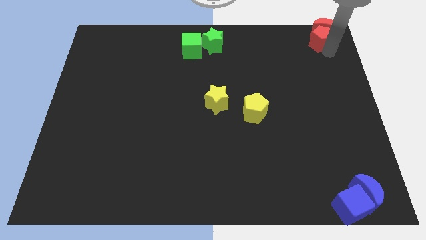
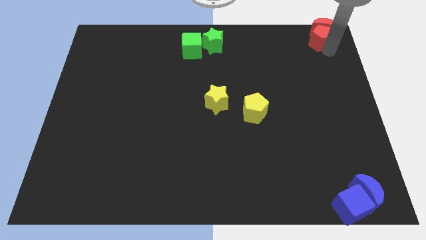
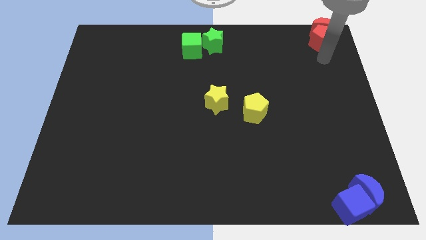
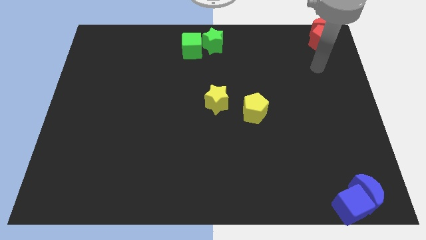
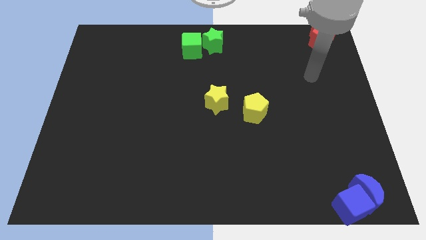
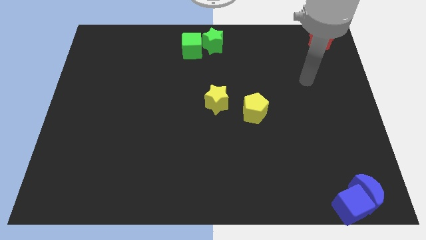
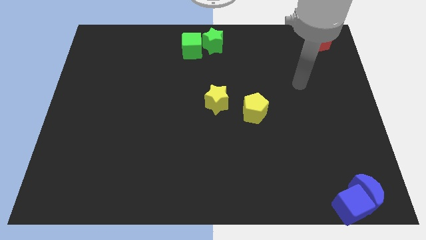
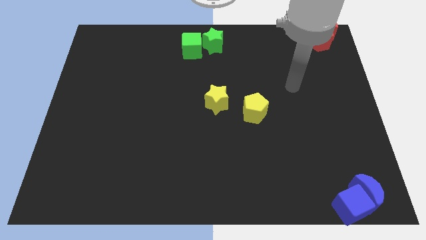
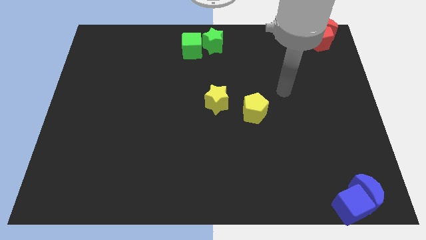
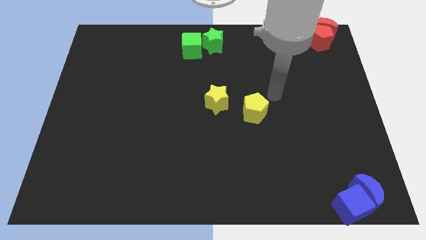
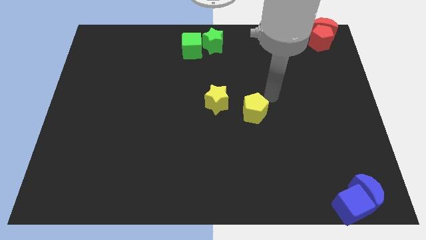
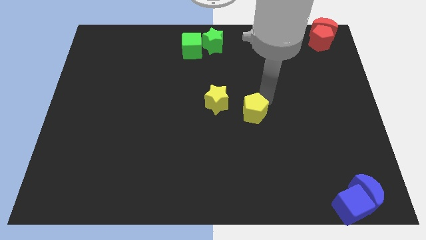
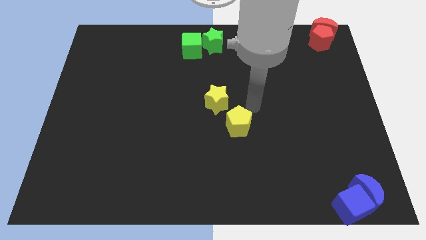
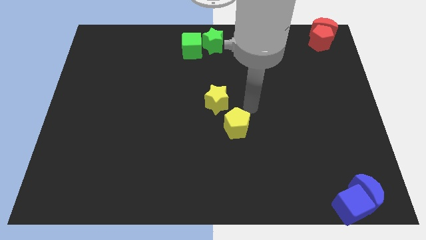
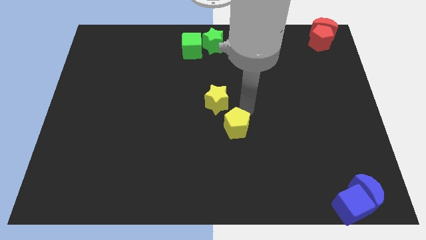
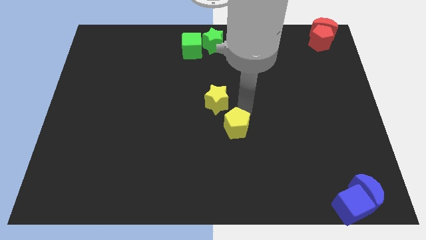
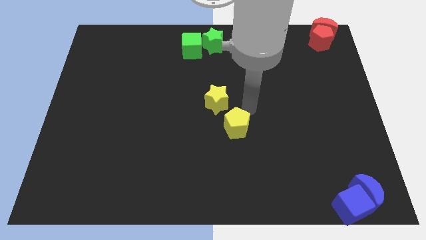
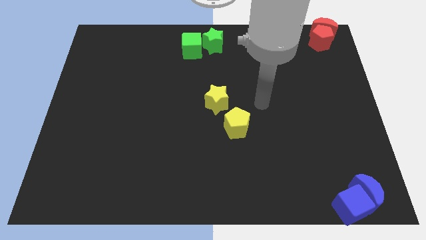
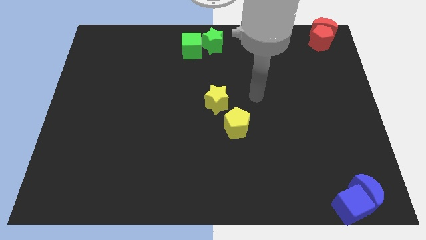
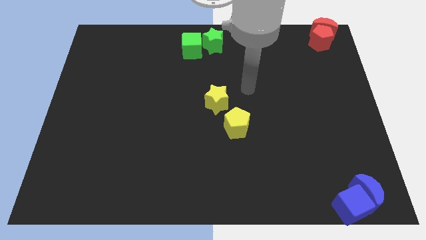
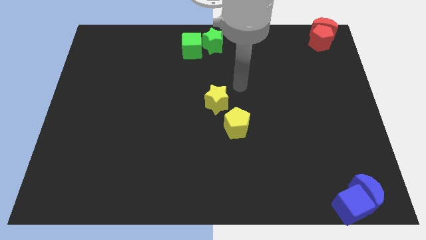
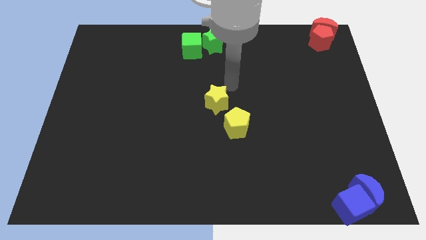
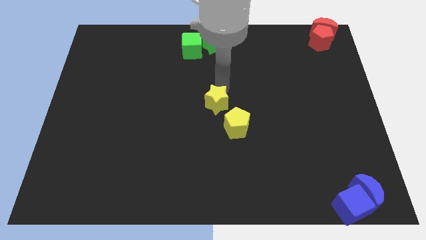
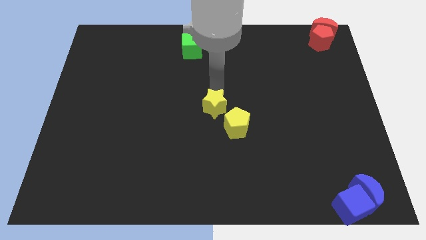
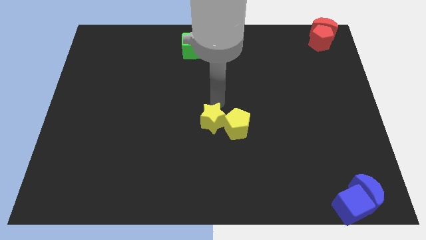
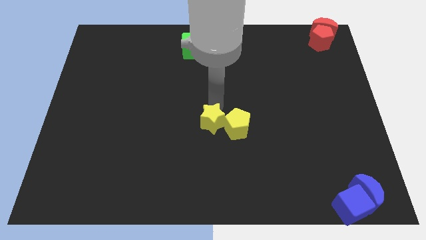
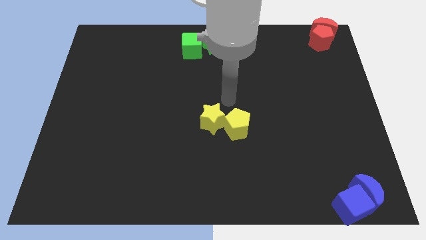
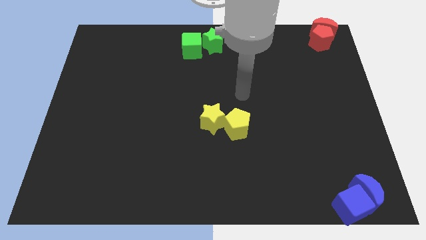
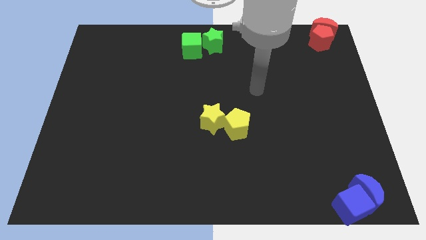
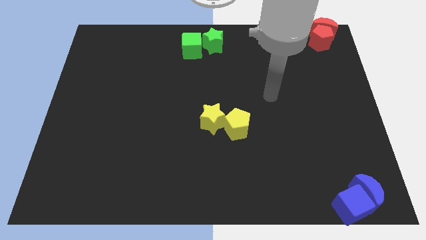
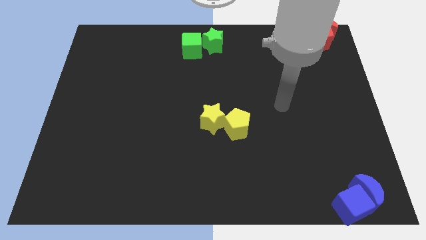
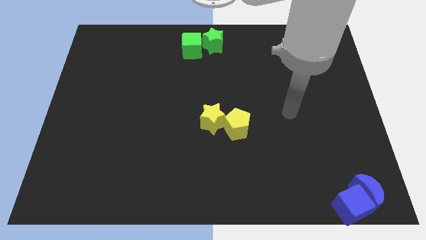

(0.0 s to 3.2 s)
move the yellow blocks close to each other

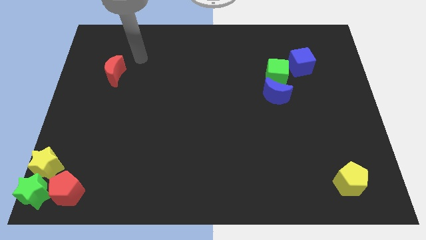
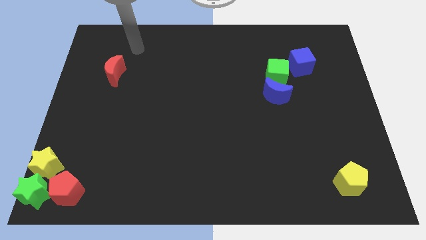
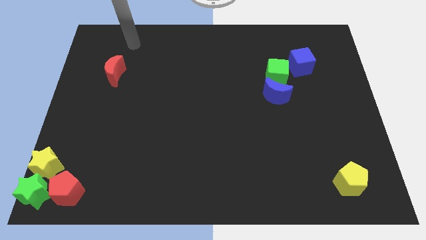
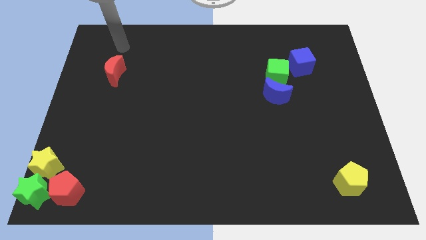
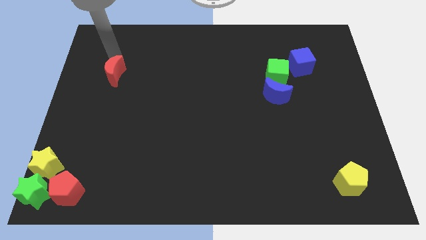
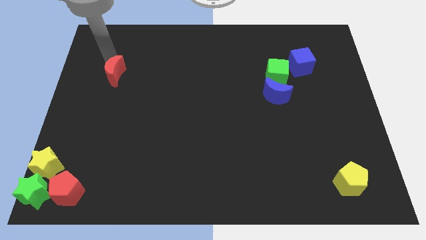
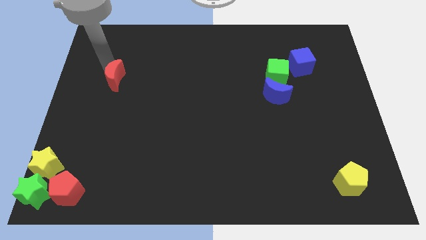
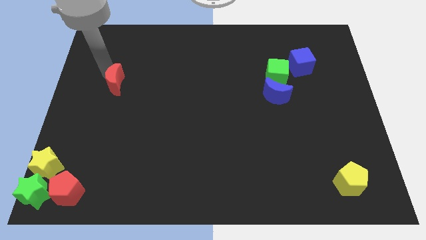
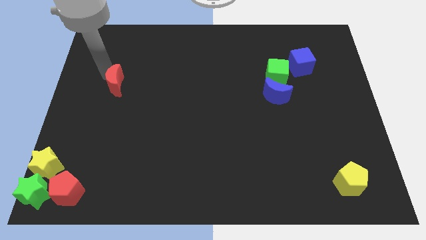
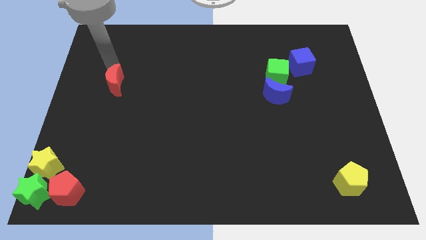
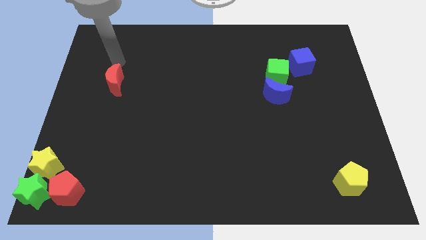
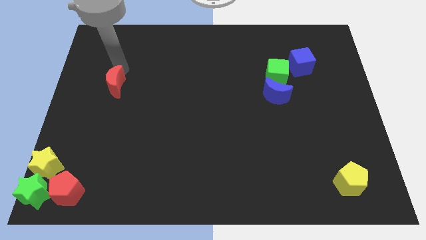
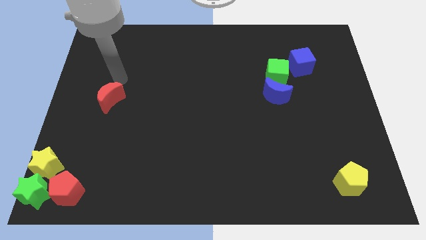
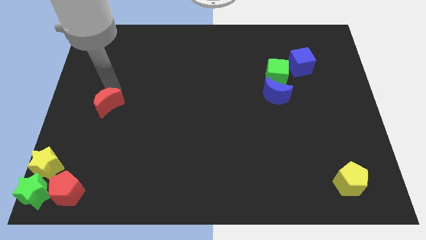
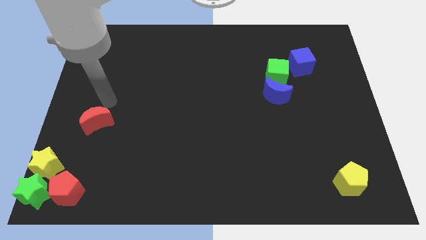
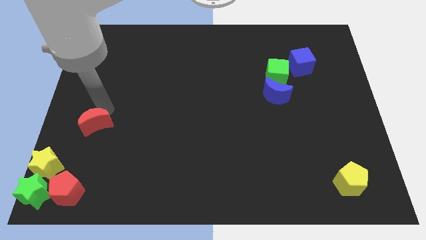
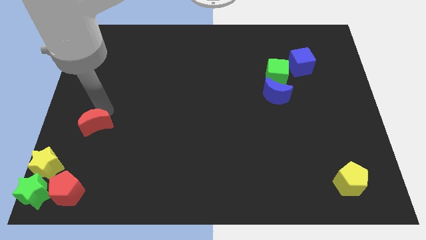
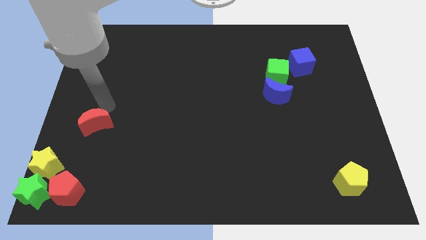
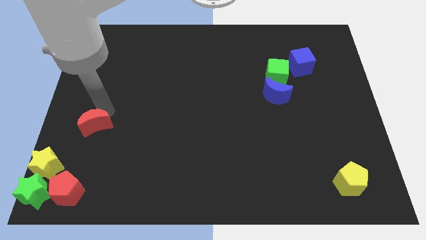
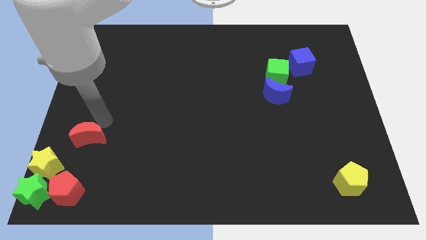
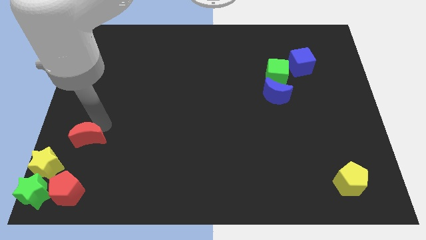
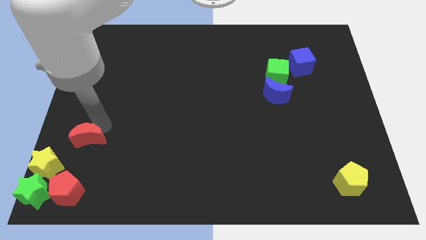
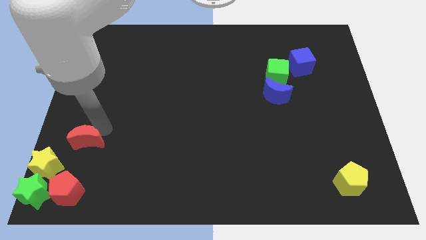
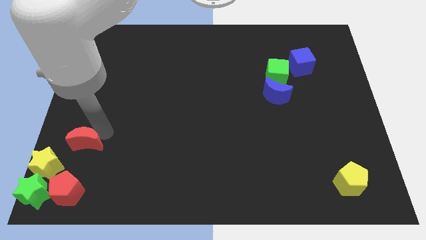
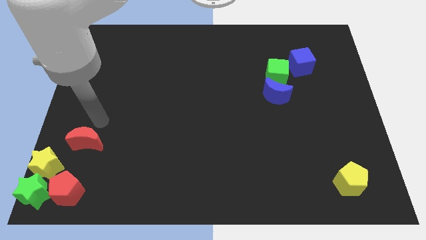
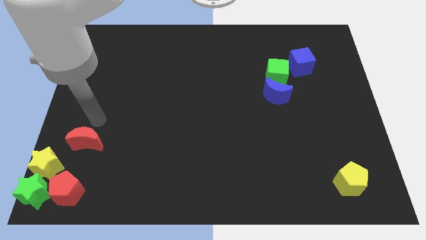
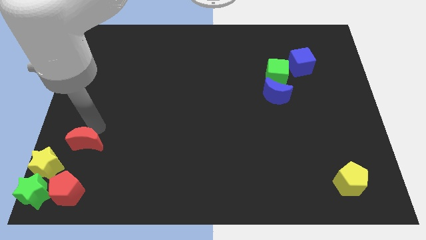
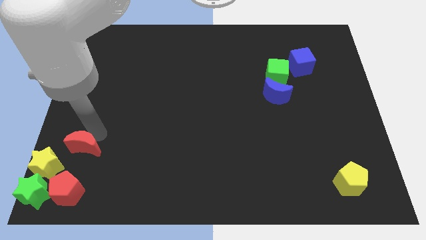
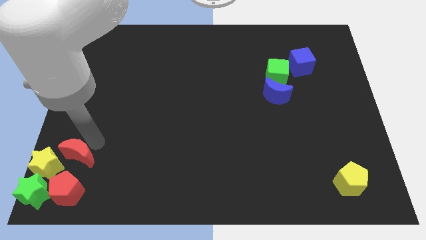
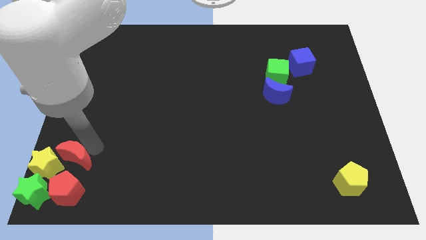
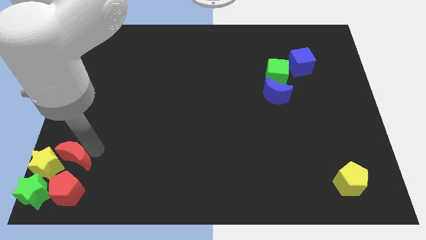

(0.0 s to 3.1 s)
put the red moon vertically above the red pentagon

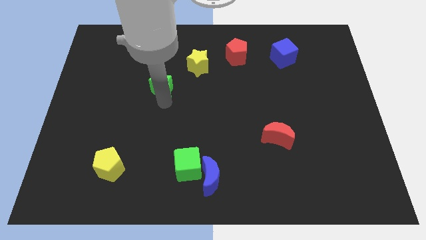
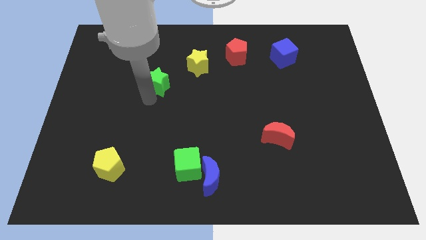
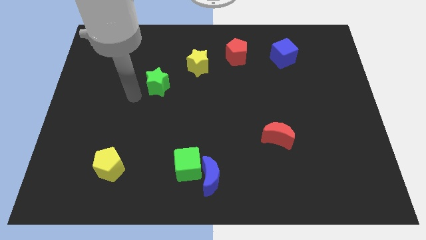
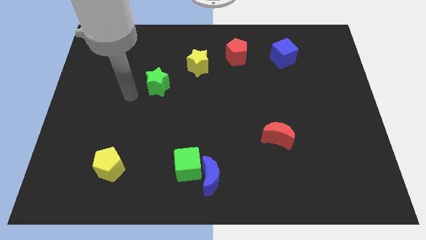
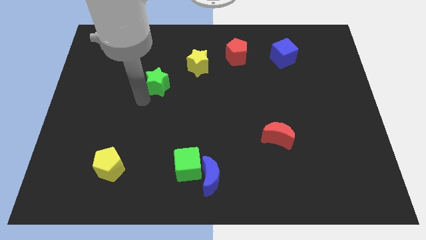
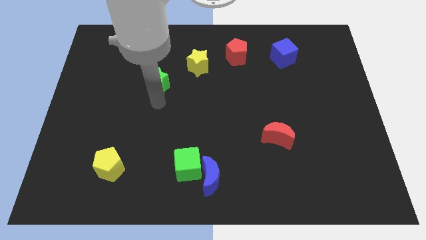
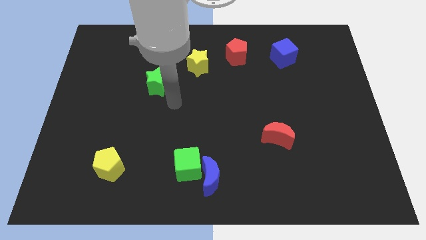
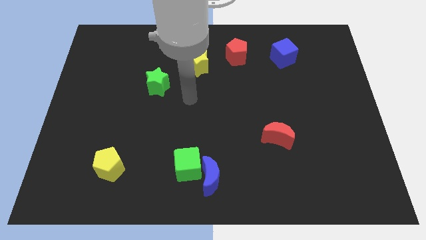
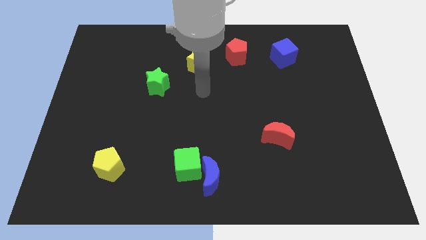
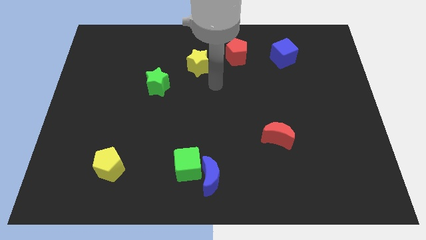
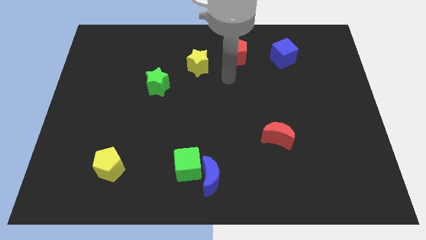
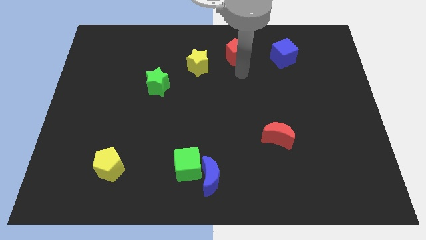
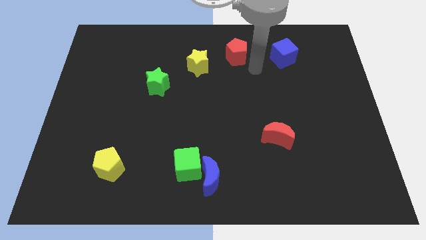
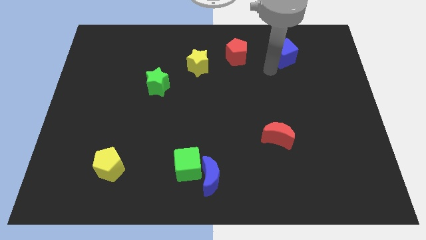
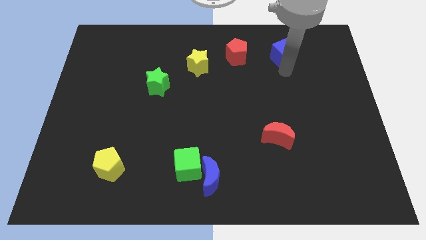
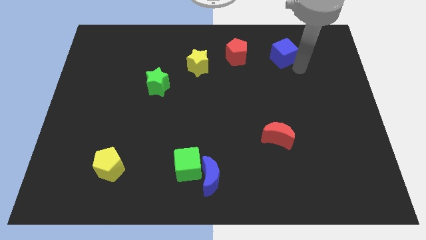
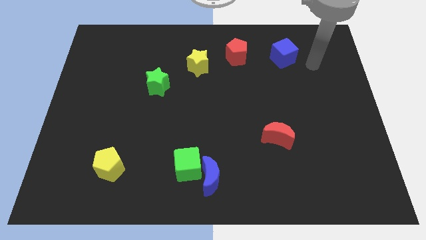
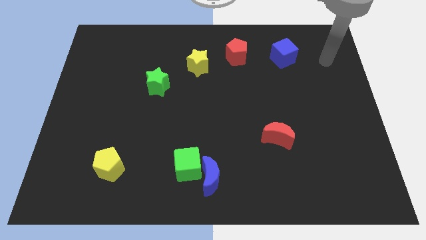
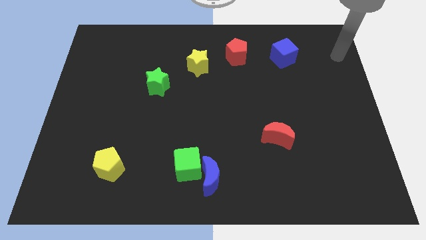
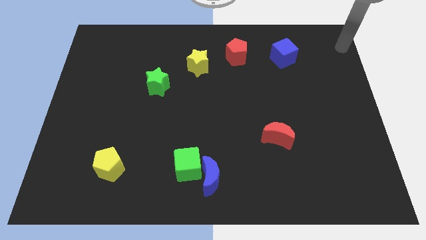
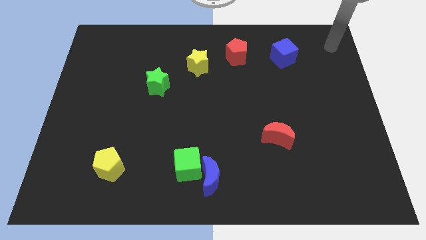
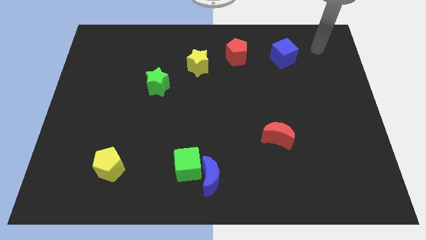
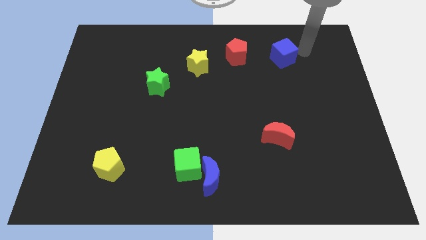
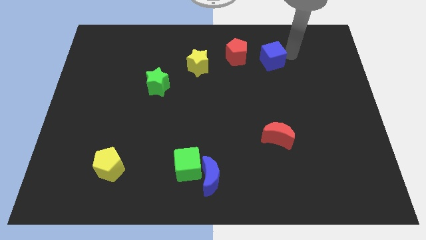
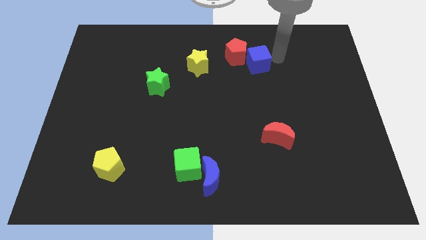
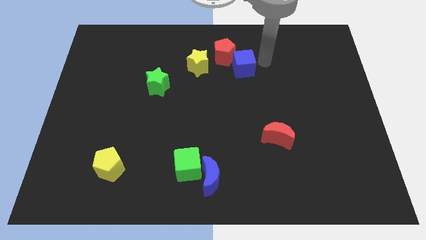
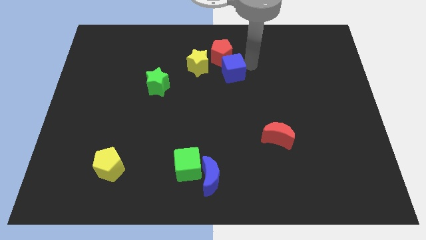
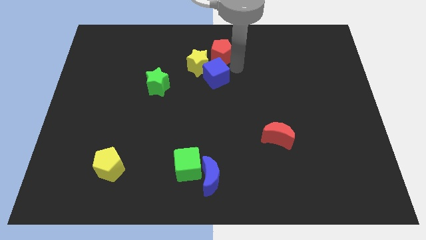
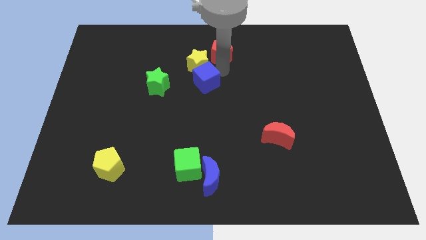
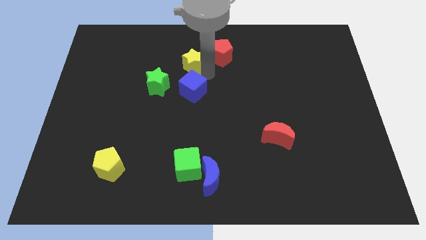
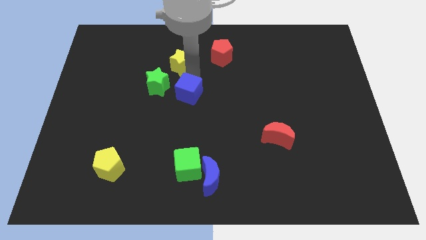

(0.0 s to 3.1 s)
place the blue cube to the bottom right to green star
